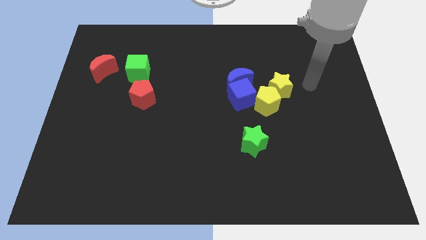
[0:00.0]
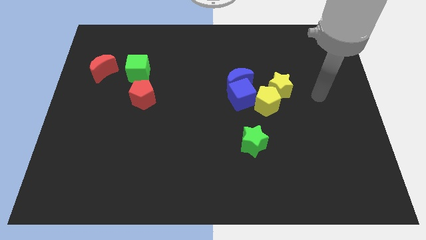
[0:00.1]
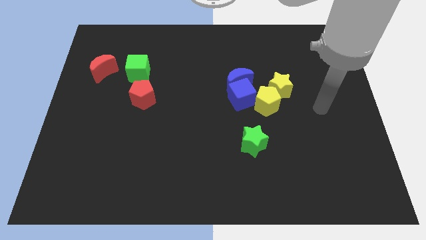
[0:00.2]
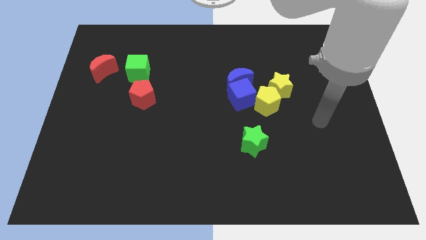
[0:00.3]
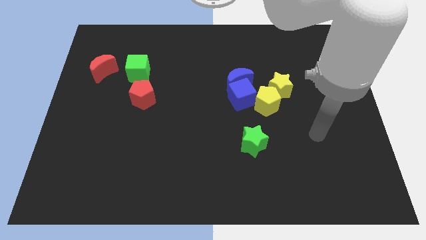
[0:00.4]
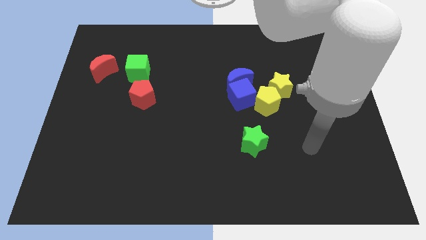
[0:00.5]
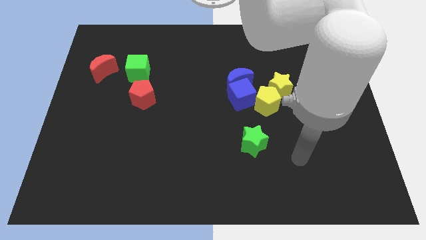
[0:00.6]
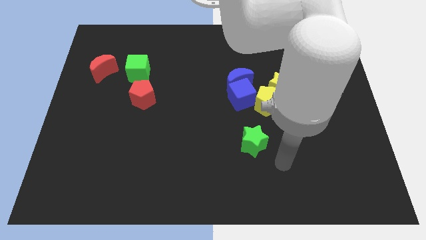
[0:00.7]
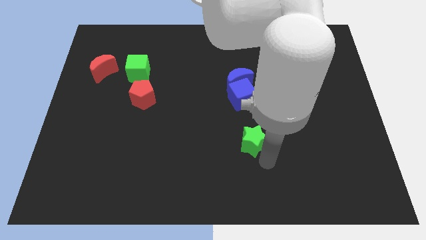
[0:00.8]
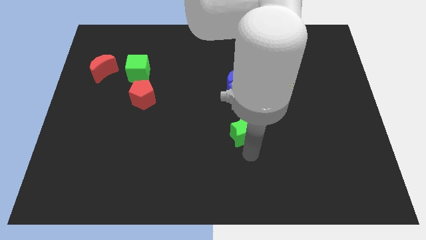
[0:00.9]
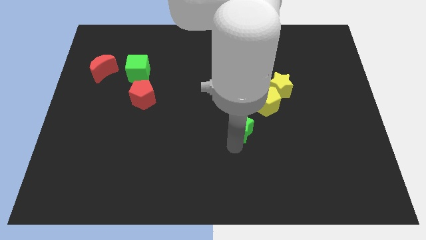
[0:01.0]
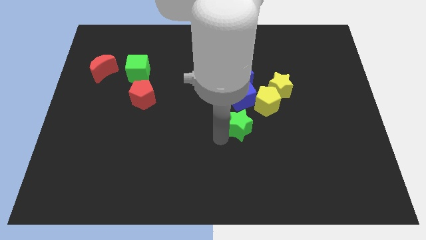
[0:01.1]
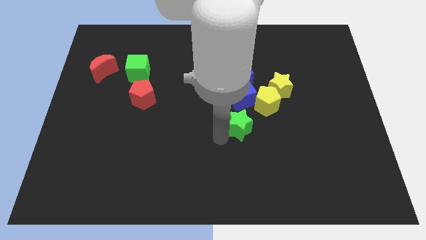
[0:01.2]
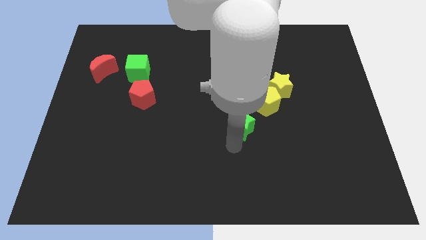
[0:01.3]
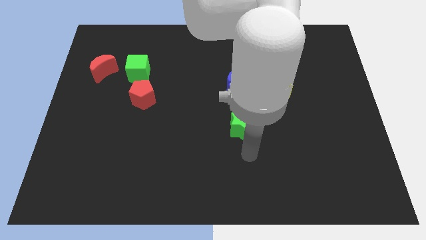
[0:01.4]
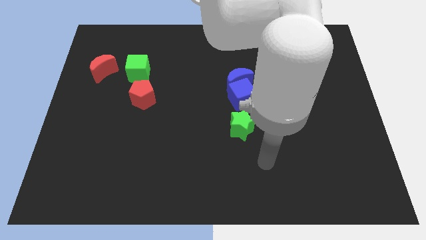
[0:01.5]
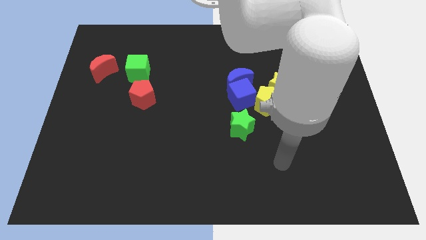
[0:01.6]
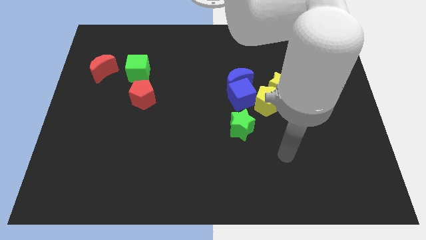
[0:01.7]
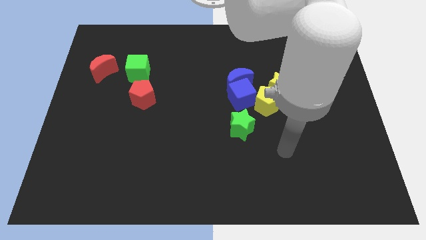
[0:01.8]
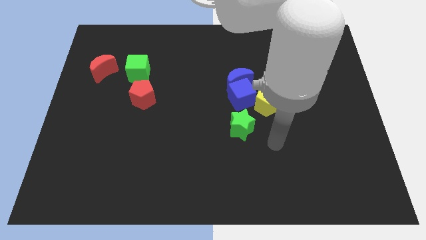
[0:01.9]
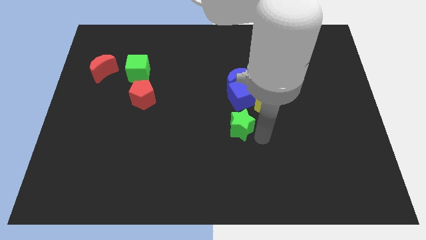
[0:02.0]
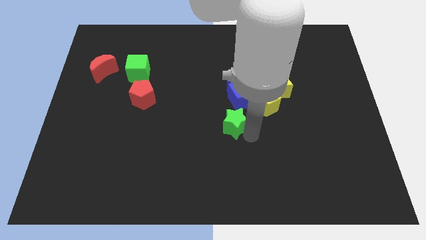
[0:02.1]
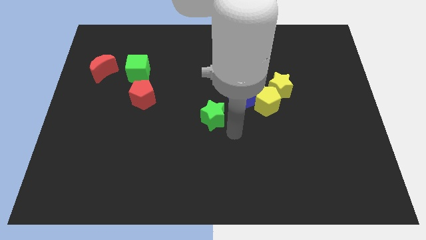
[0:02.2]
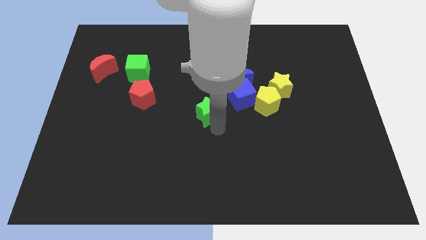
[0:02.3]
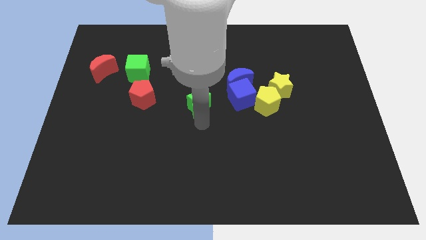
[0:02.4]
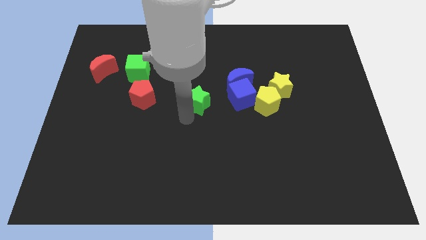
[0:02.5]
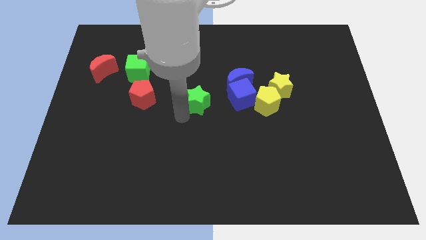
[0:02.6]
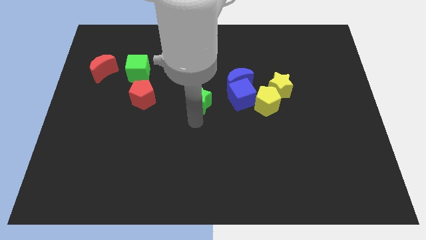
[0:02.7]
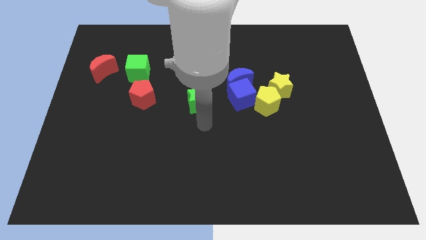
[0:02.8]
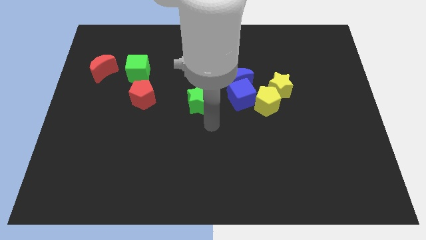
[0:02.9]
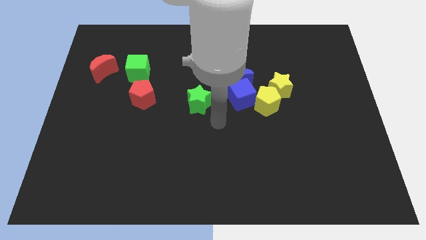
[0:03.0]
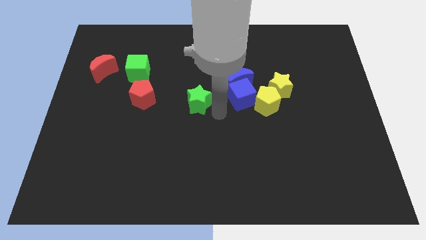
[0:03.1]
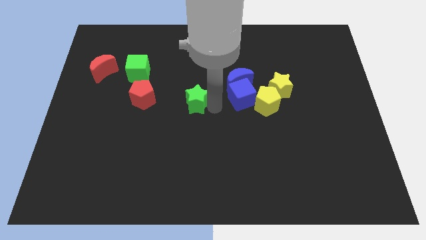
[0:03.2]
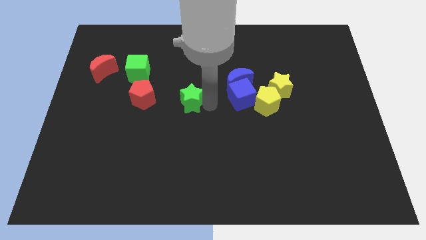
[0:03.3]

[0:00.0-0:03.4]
push the green star to the center of the board

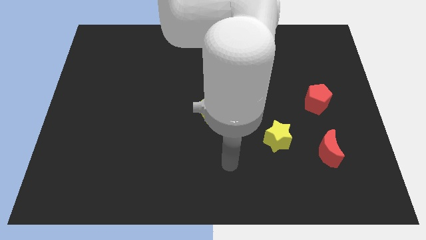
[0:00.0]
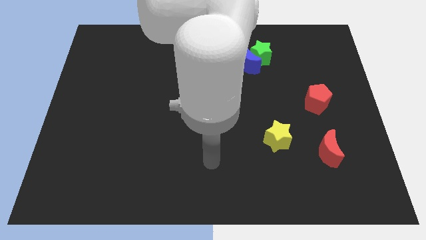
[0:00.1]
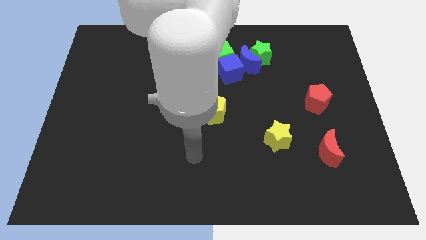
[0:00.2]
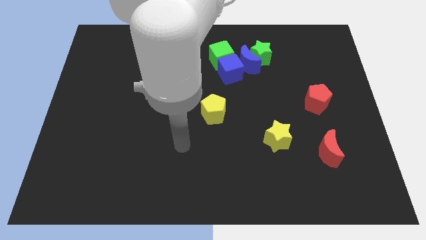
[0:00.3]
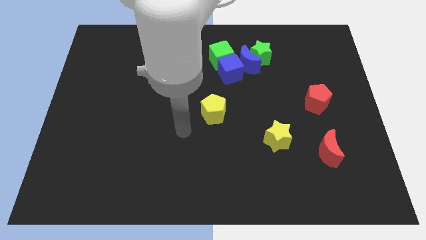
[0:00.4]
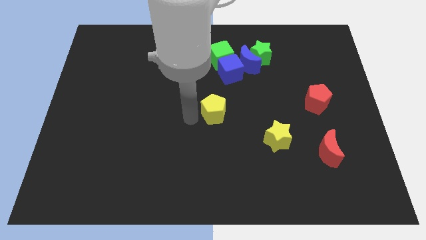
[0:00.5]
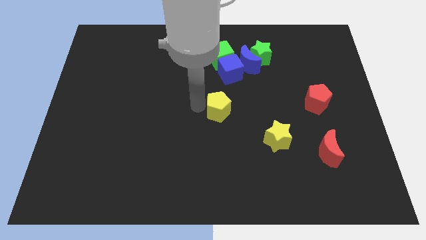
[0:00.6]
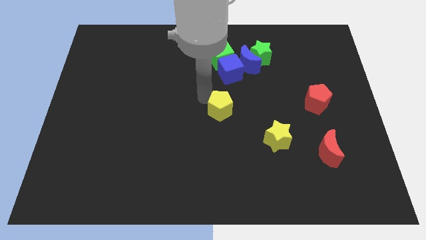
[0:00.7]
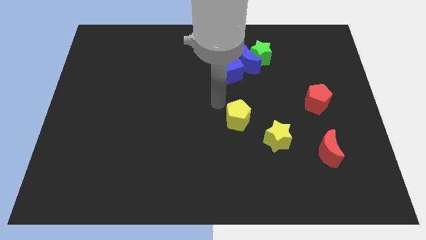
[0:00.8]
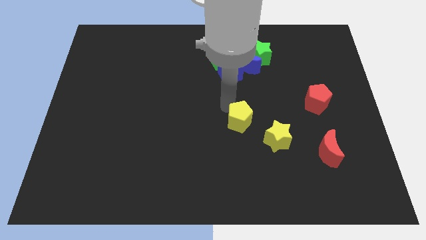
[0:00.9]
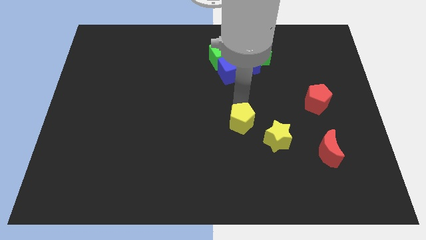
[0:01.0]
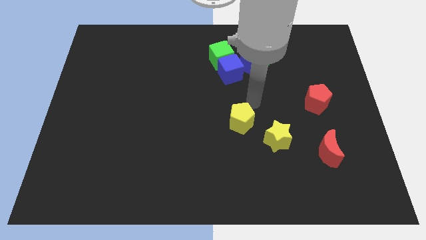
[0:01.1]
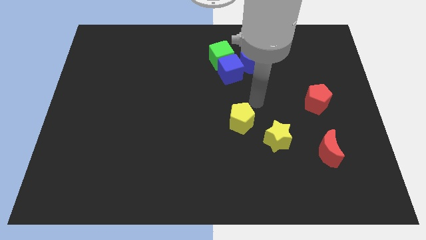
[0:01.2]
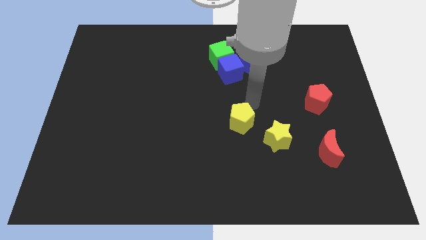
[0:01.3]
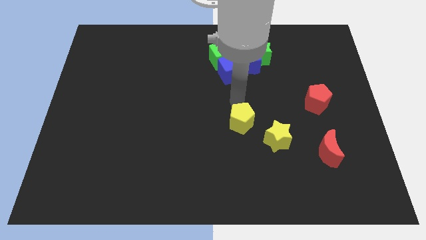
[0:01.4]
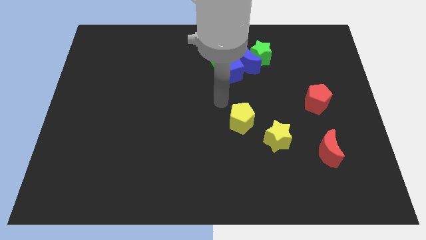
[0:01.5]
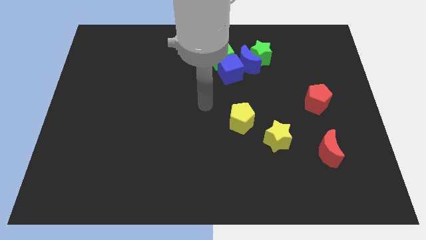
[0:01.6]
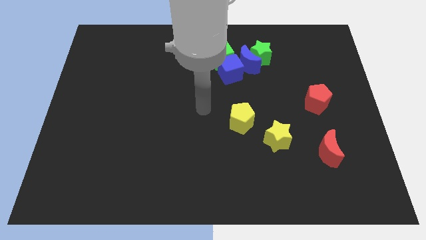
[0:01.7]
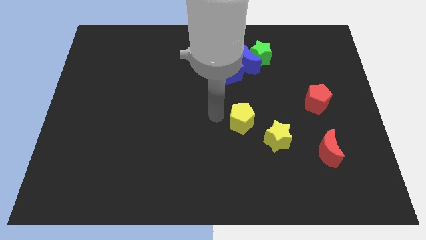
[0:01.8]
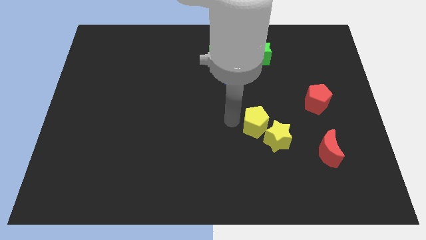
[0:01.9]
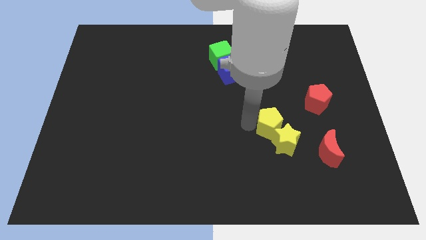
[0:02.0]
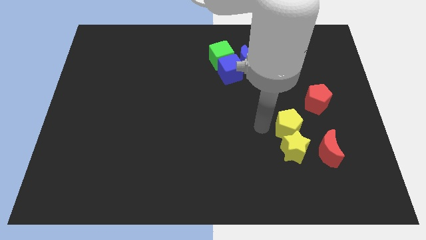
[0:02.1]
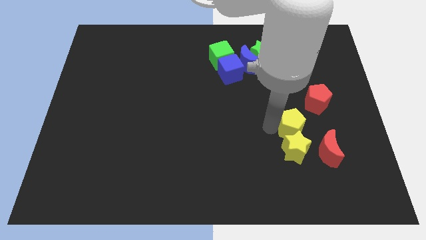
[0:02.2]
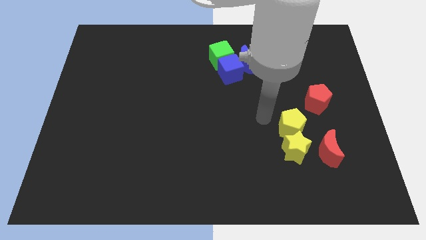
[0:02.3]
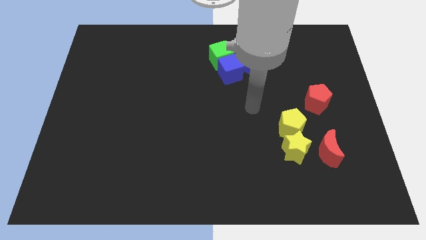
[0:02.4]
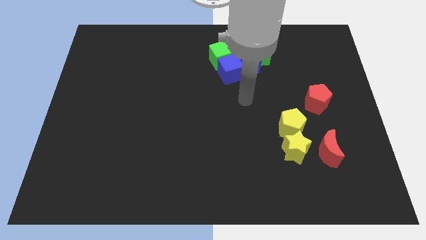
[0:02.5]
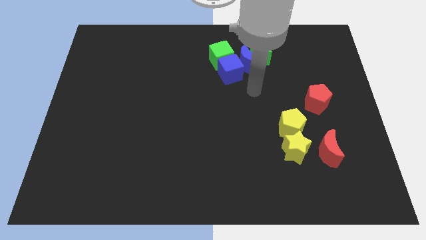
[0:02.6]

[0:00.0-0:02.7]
push the yellow pentagon above the yellow star

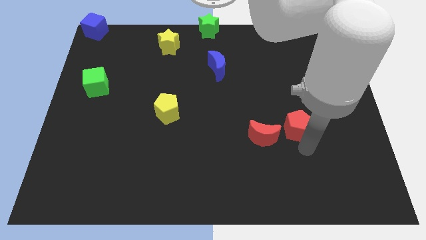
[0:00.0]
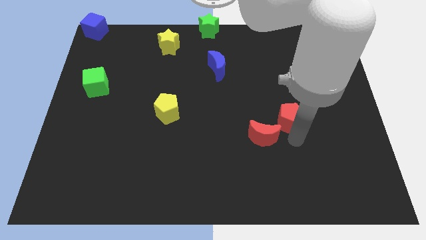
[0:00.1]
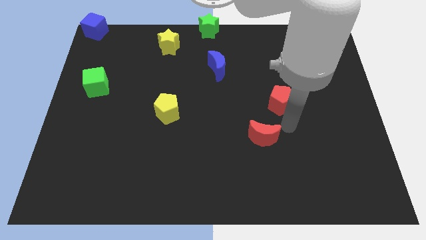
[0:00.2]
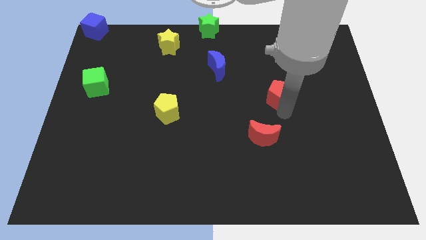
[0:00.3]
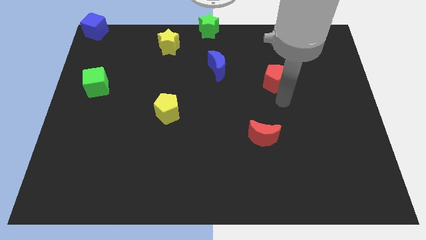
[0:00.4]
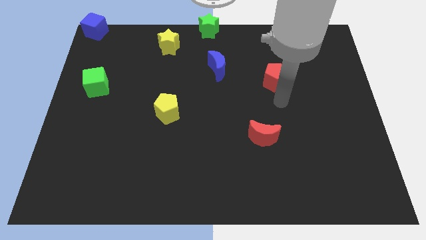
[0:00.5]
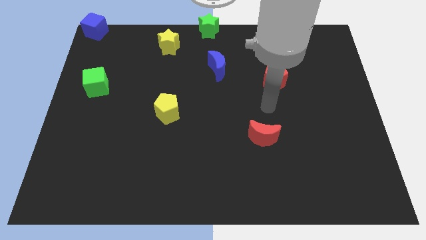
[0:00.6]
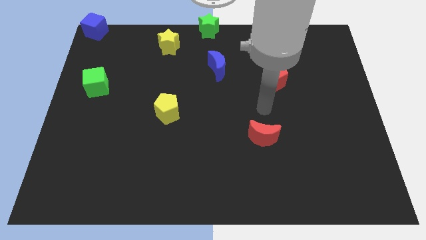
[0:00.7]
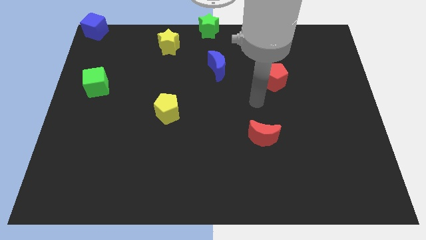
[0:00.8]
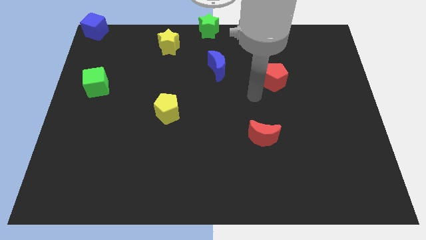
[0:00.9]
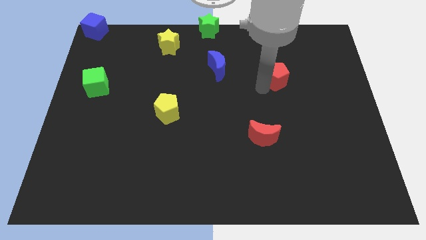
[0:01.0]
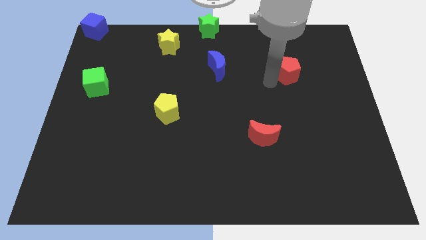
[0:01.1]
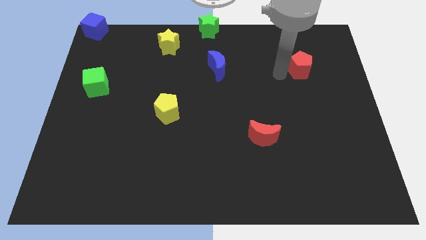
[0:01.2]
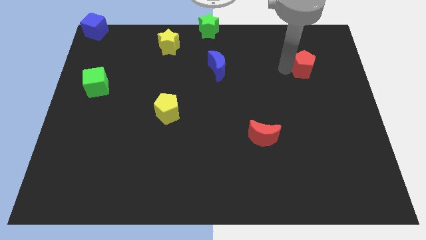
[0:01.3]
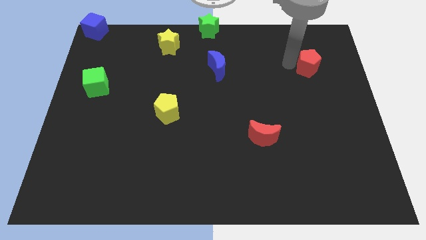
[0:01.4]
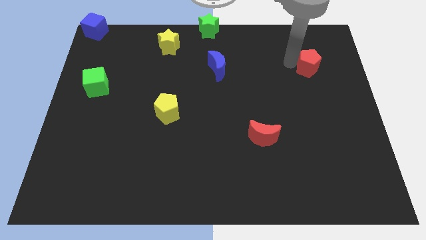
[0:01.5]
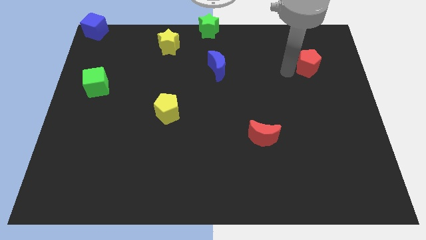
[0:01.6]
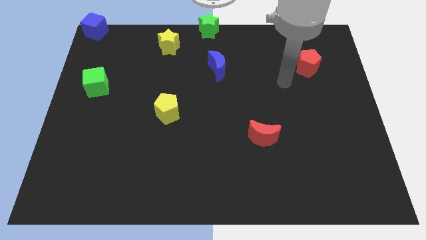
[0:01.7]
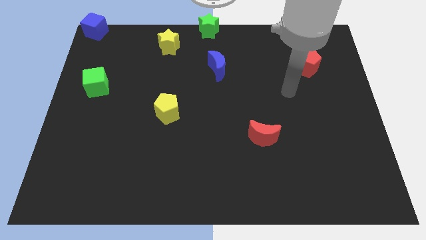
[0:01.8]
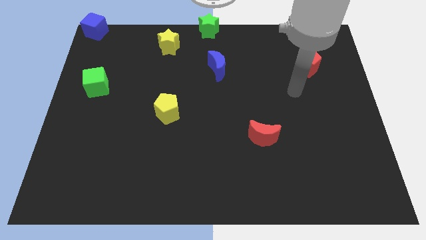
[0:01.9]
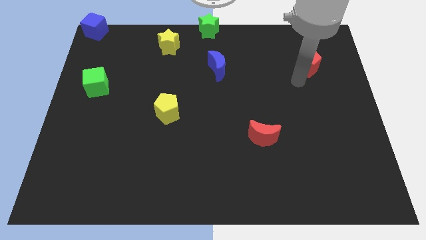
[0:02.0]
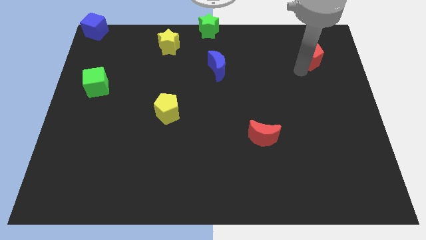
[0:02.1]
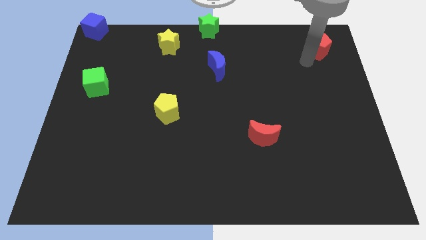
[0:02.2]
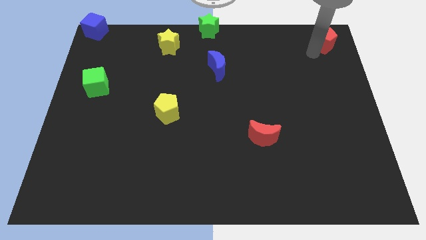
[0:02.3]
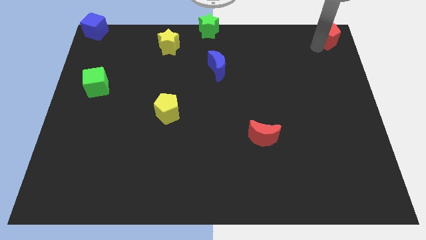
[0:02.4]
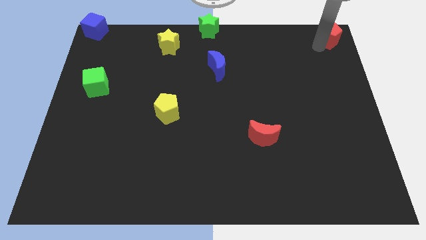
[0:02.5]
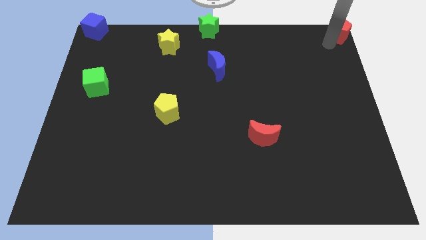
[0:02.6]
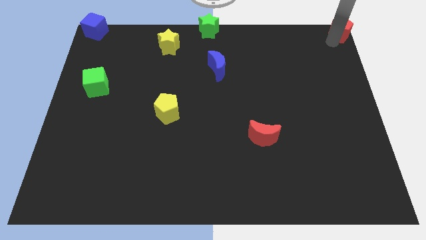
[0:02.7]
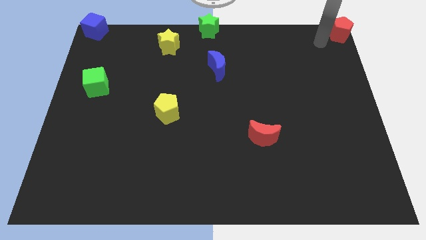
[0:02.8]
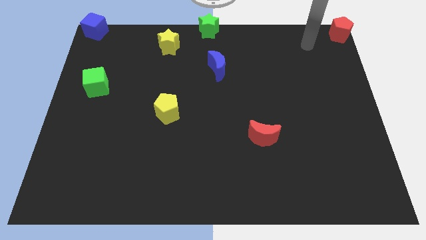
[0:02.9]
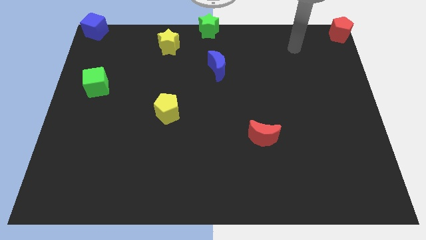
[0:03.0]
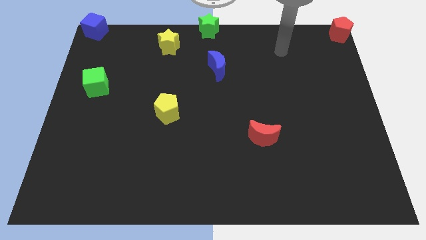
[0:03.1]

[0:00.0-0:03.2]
put the red pentagon at the top right corner of the board
